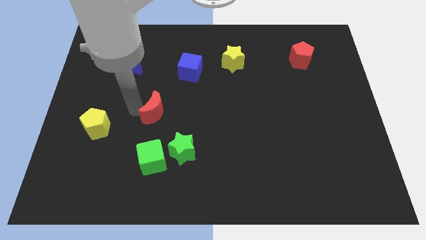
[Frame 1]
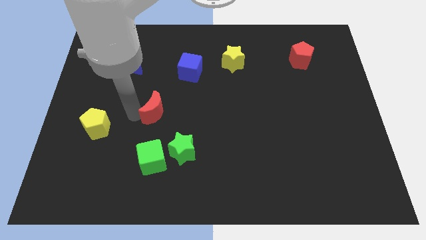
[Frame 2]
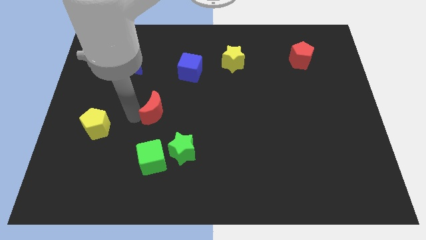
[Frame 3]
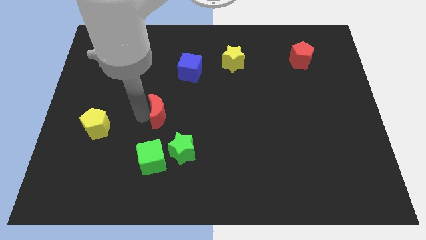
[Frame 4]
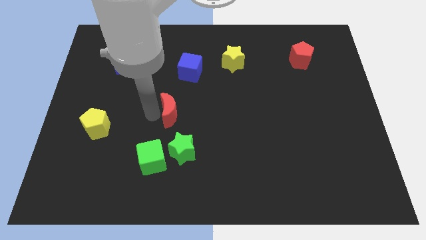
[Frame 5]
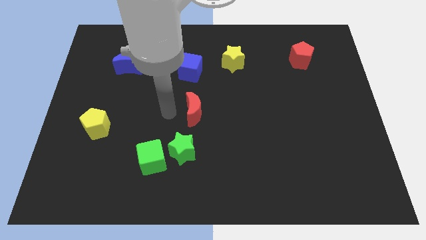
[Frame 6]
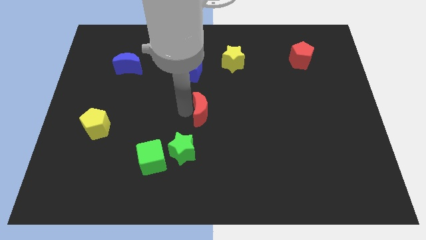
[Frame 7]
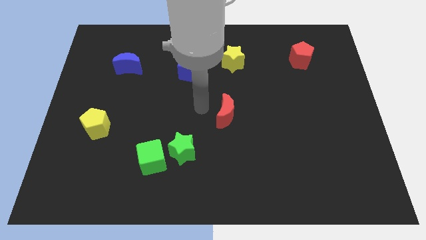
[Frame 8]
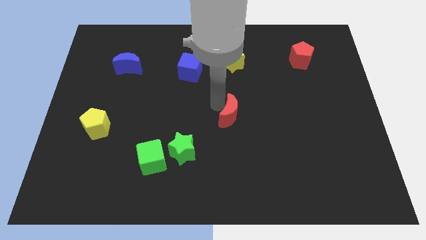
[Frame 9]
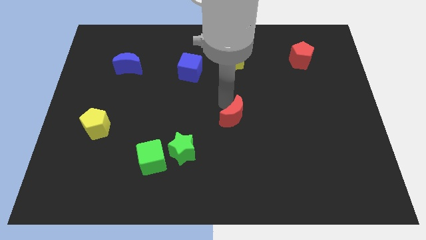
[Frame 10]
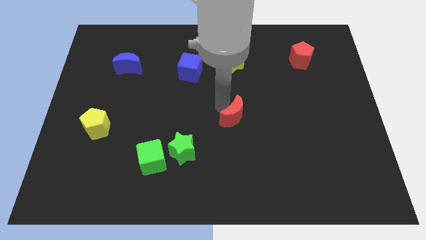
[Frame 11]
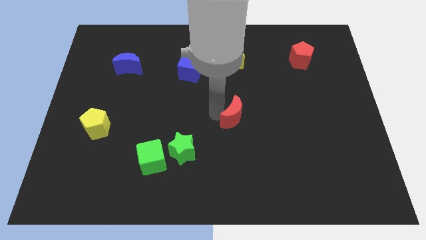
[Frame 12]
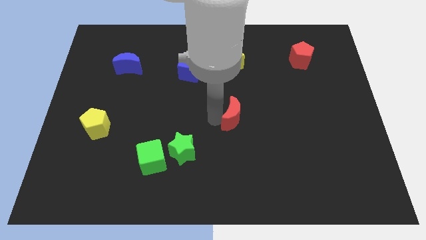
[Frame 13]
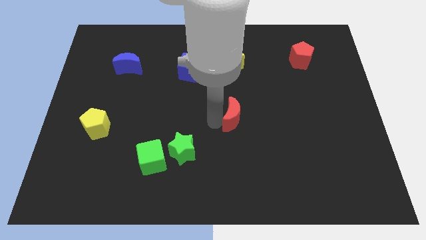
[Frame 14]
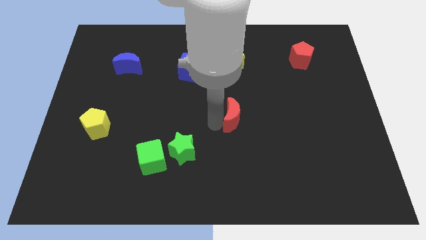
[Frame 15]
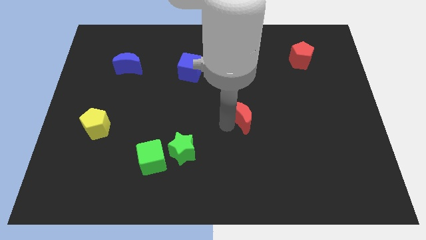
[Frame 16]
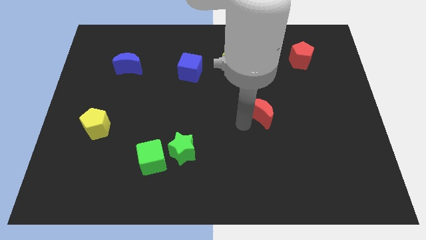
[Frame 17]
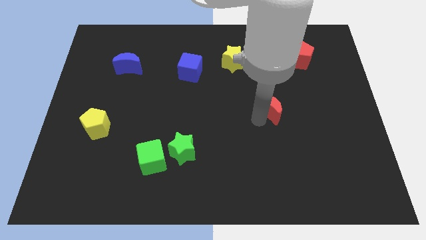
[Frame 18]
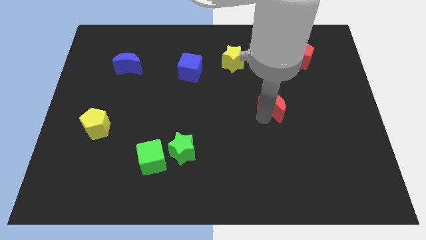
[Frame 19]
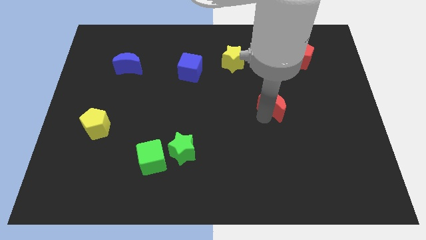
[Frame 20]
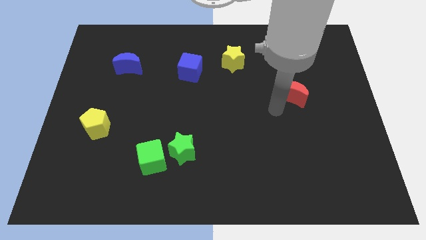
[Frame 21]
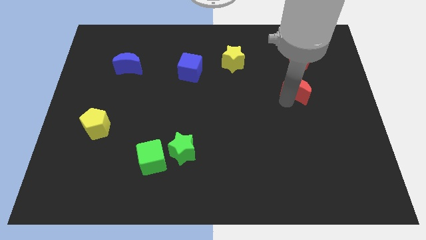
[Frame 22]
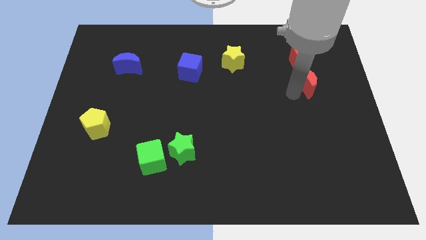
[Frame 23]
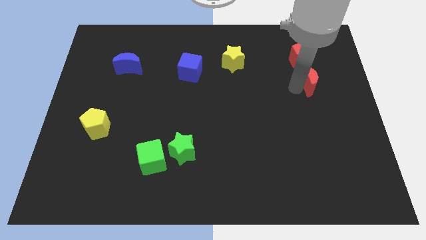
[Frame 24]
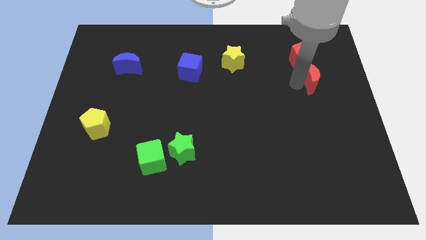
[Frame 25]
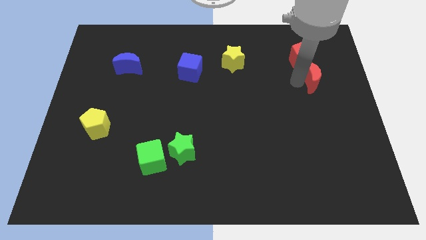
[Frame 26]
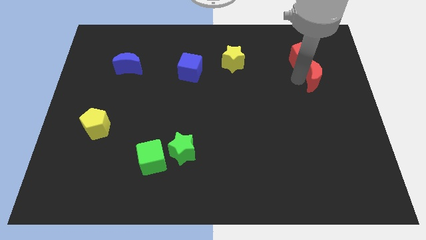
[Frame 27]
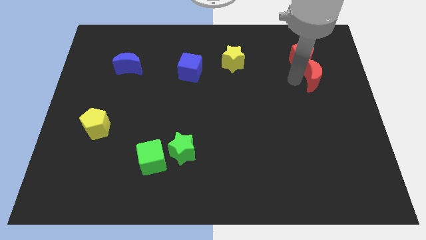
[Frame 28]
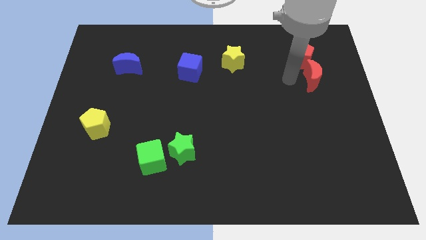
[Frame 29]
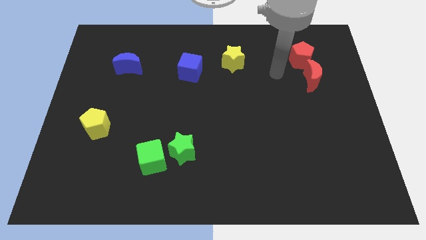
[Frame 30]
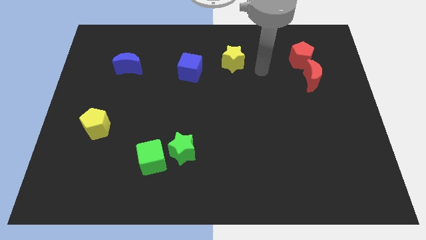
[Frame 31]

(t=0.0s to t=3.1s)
slide the red moon vertically below the red pentagon

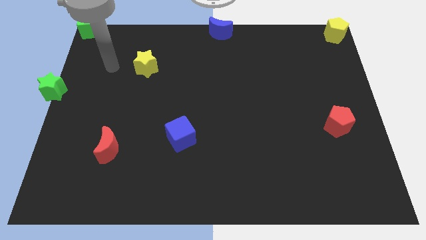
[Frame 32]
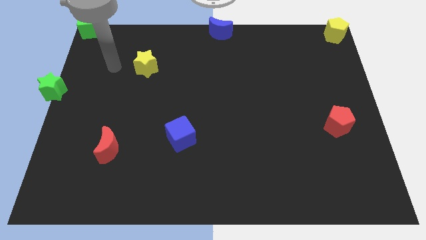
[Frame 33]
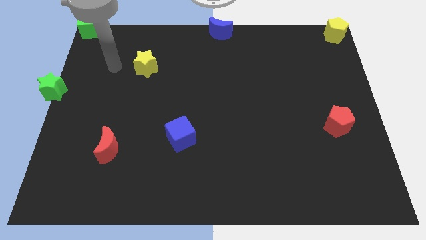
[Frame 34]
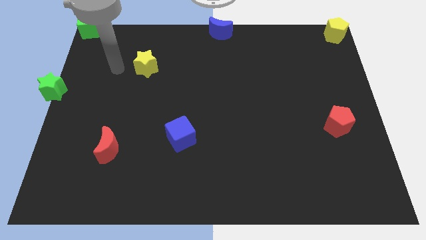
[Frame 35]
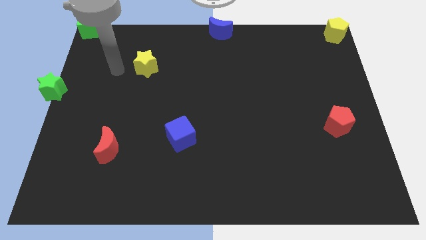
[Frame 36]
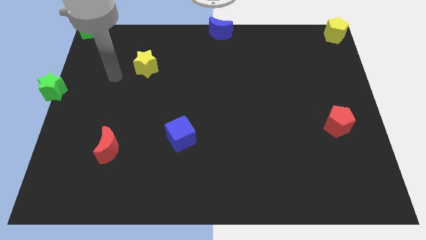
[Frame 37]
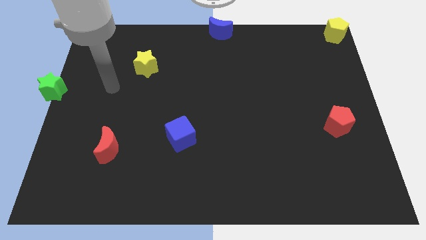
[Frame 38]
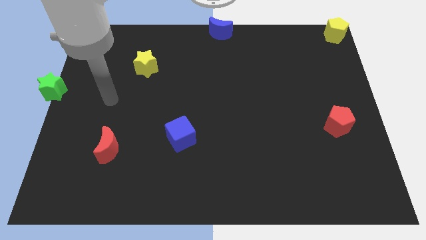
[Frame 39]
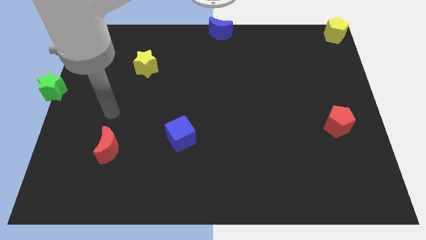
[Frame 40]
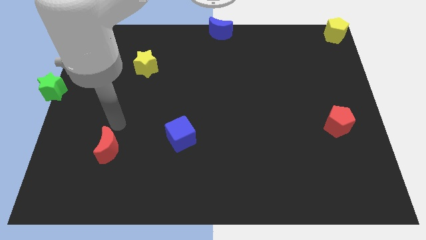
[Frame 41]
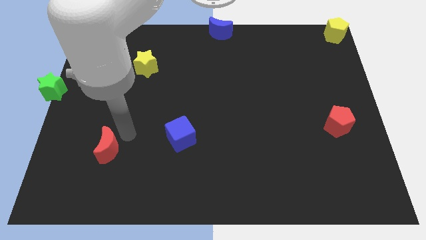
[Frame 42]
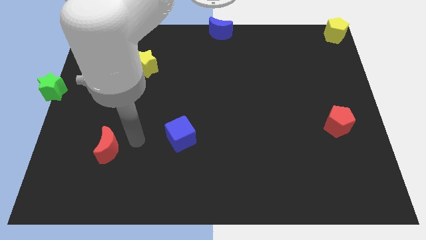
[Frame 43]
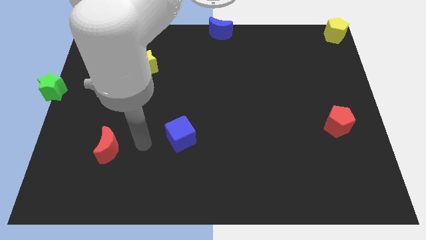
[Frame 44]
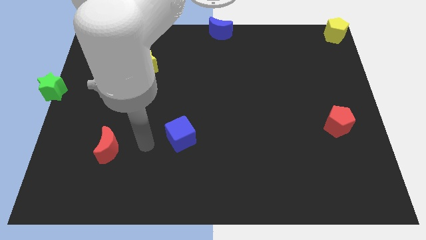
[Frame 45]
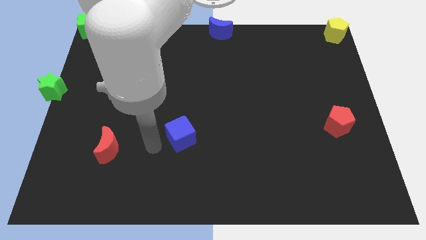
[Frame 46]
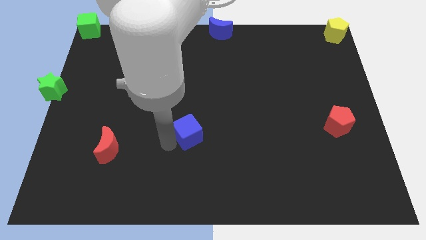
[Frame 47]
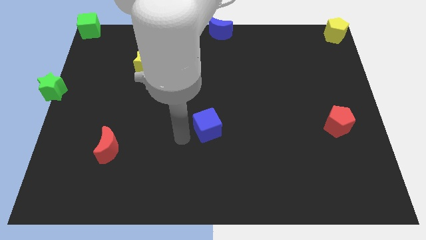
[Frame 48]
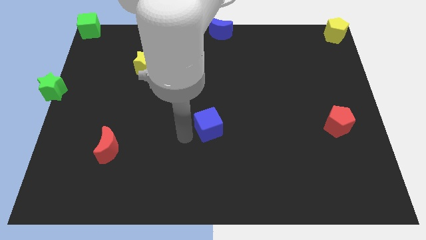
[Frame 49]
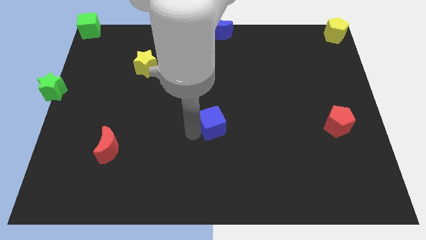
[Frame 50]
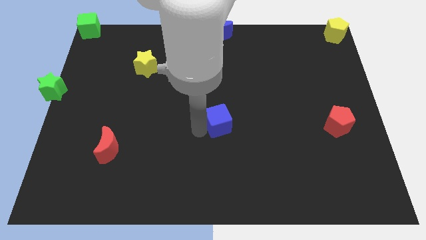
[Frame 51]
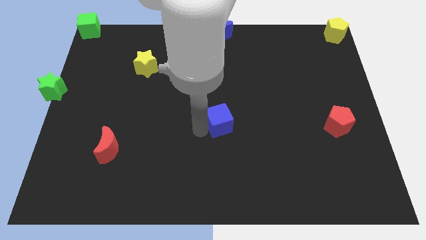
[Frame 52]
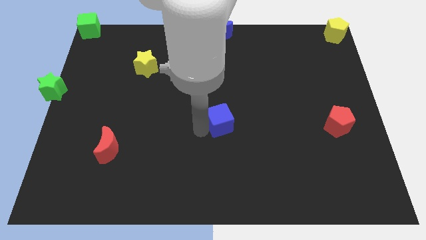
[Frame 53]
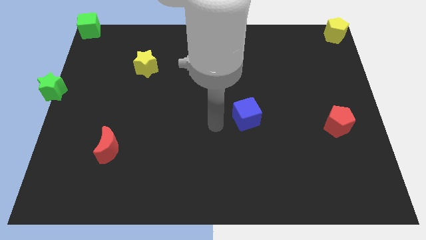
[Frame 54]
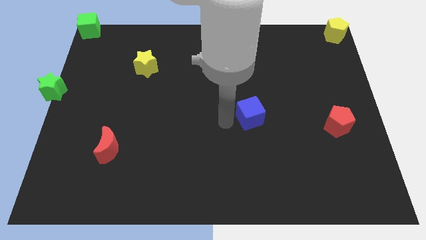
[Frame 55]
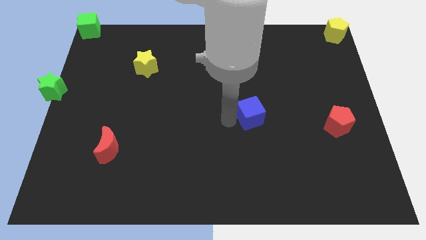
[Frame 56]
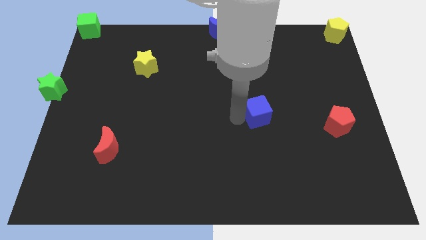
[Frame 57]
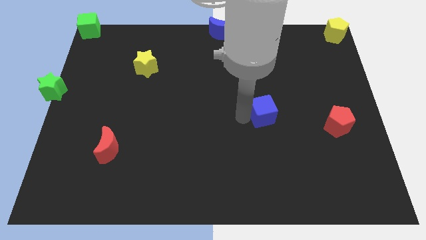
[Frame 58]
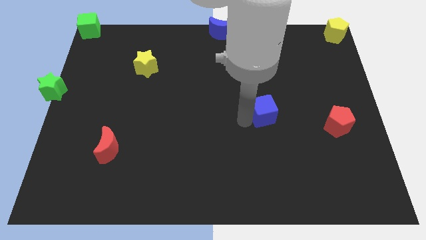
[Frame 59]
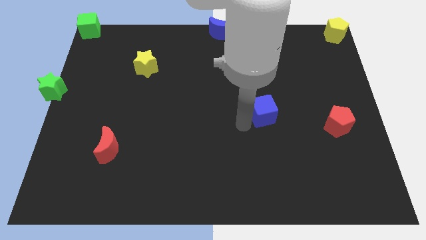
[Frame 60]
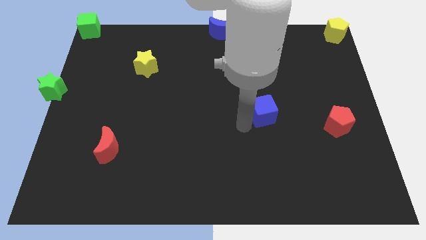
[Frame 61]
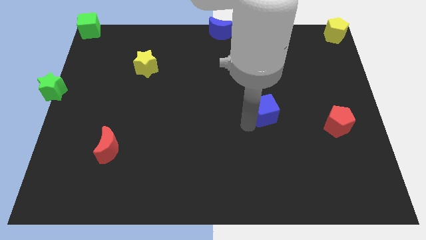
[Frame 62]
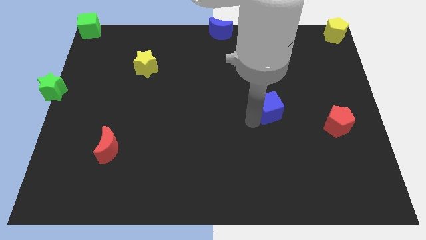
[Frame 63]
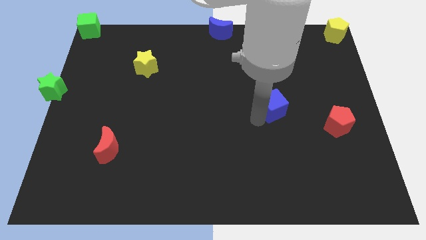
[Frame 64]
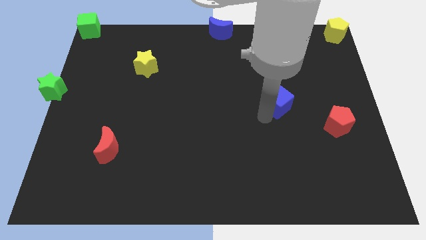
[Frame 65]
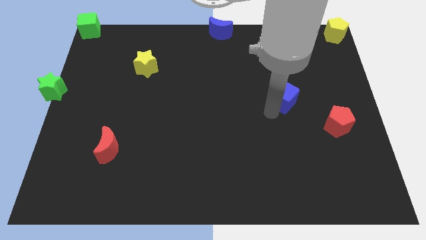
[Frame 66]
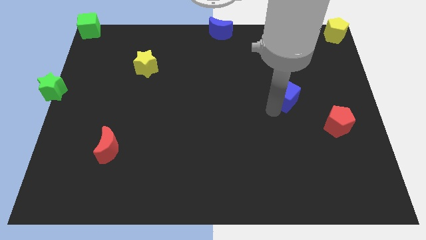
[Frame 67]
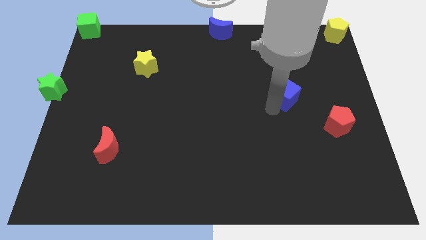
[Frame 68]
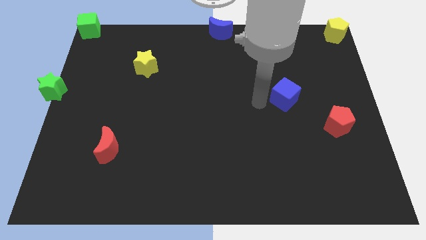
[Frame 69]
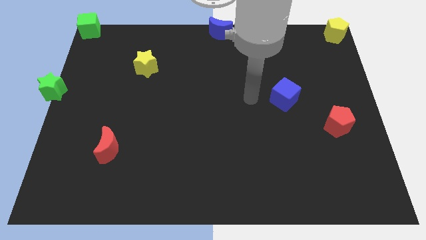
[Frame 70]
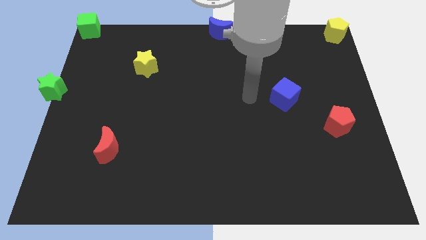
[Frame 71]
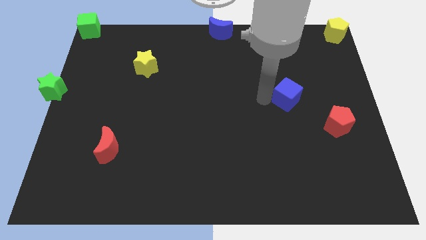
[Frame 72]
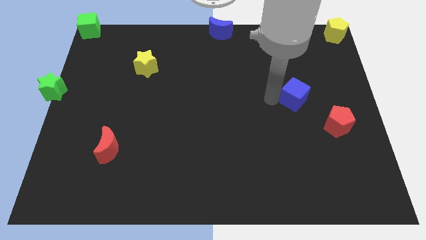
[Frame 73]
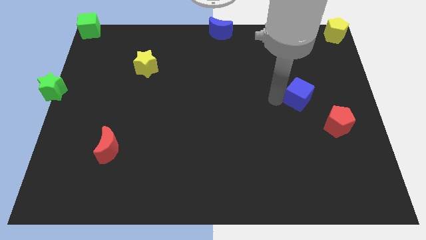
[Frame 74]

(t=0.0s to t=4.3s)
move the blue cube diagonally top left to the red pentagon

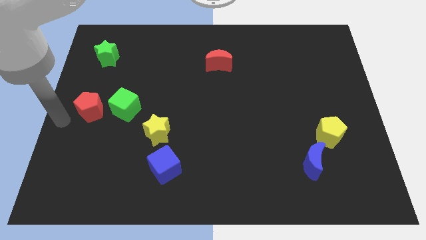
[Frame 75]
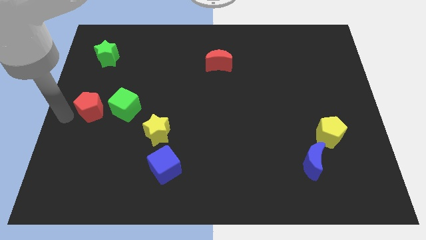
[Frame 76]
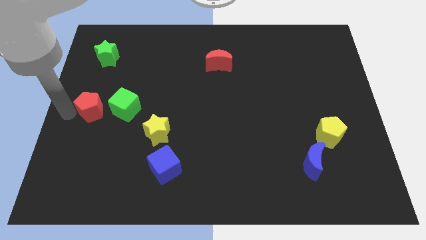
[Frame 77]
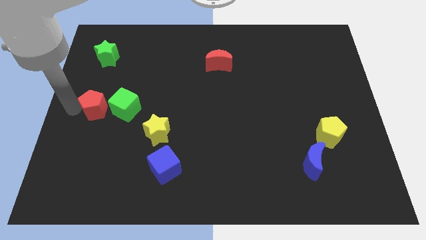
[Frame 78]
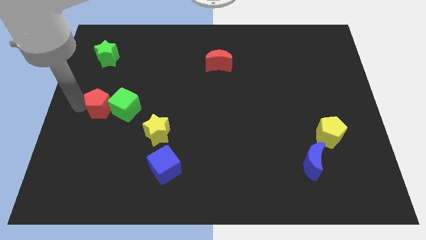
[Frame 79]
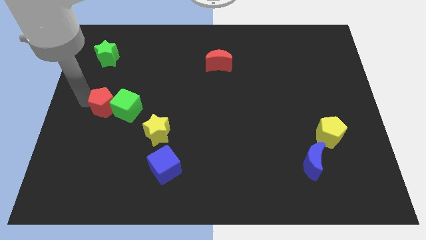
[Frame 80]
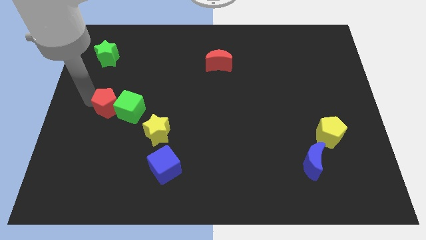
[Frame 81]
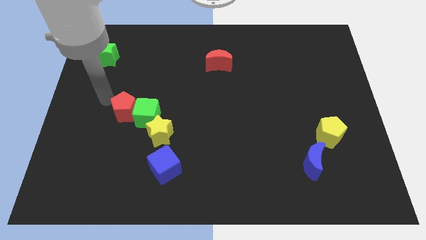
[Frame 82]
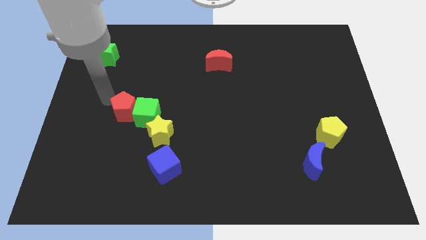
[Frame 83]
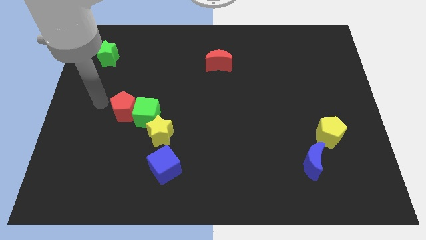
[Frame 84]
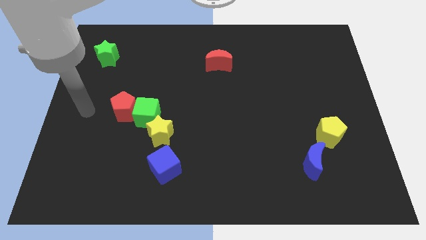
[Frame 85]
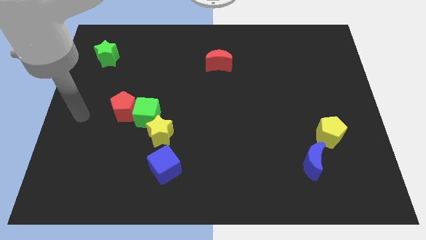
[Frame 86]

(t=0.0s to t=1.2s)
push red pentagon beside green cube

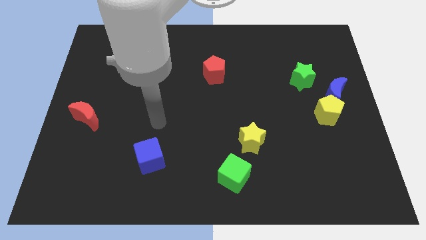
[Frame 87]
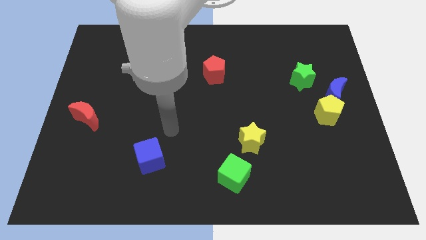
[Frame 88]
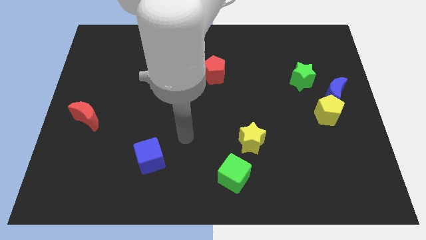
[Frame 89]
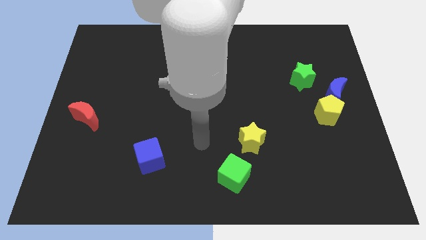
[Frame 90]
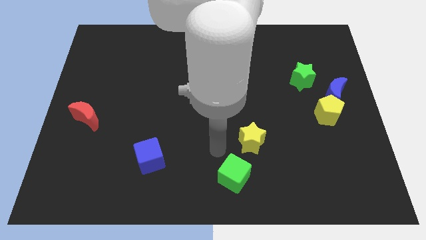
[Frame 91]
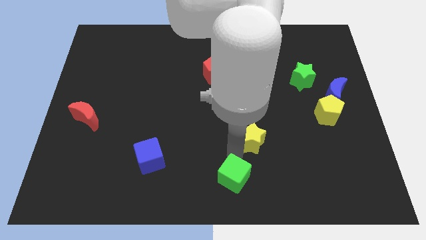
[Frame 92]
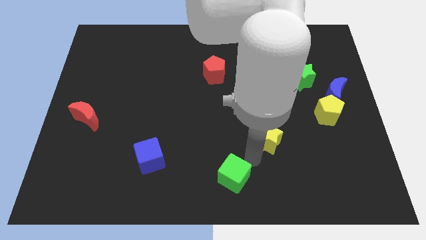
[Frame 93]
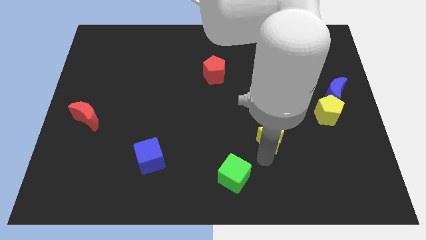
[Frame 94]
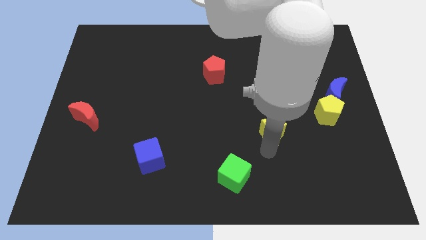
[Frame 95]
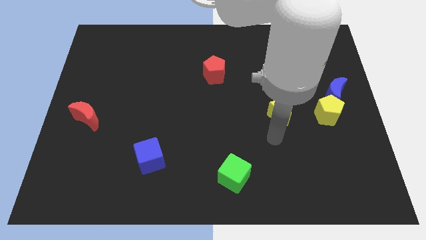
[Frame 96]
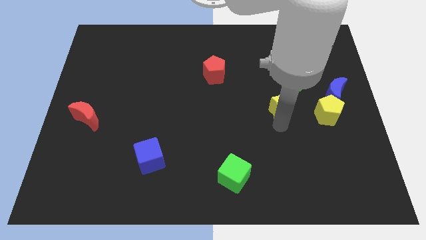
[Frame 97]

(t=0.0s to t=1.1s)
place the yellow star left to the yellow pentagon
